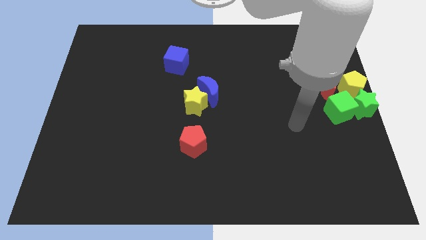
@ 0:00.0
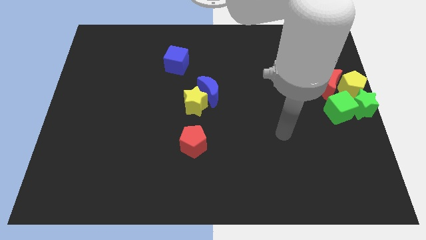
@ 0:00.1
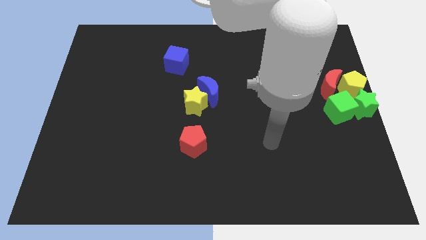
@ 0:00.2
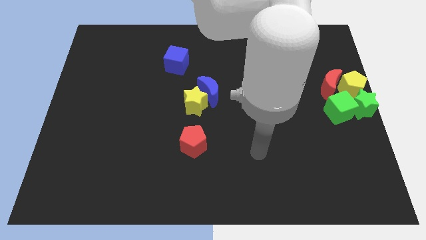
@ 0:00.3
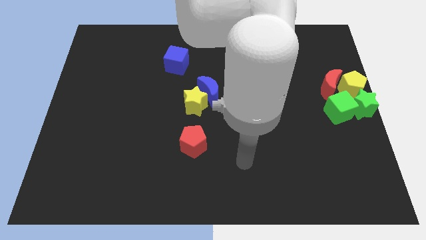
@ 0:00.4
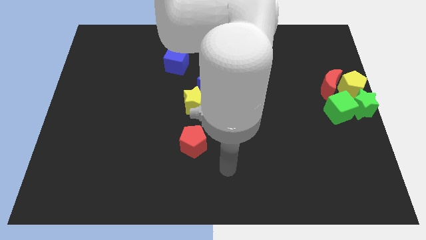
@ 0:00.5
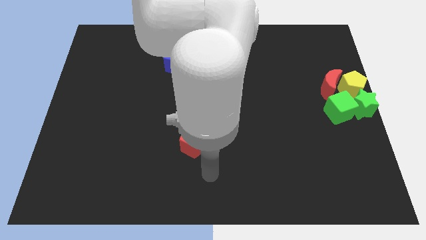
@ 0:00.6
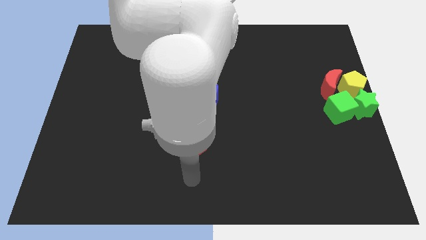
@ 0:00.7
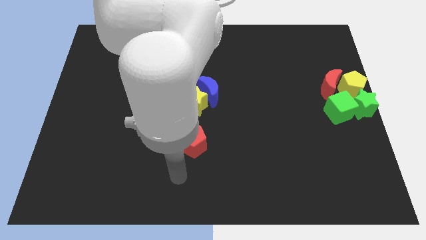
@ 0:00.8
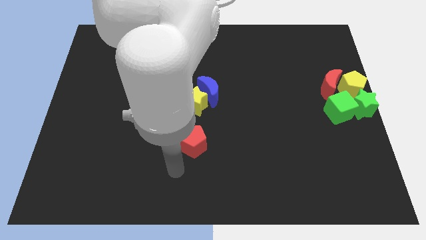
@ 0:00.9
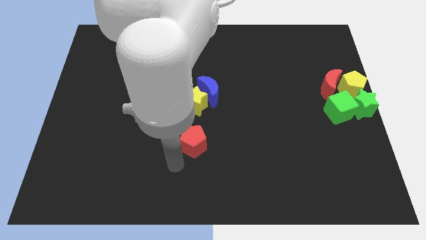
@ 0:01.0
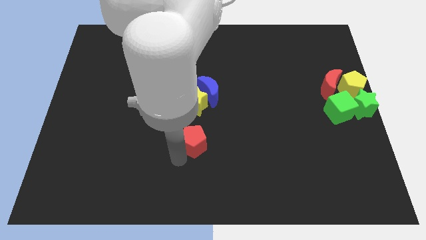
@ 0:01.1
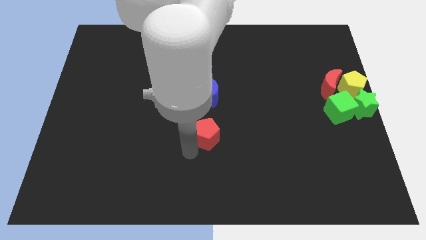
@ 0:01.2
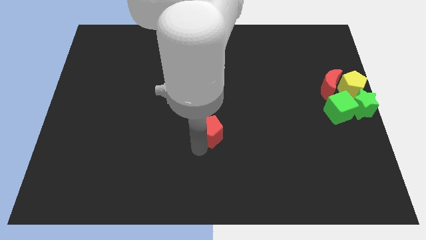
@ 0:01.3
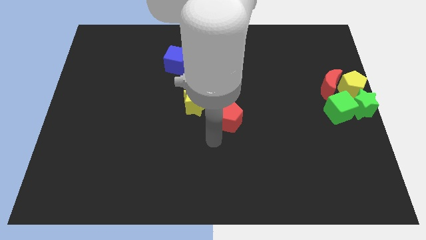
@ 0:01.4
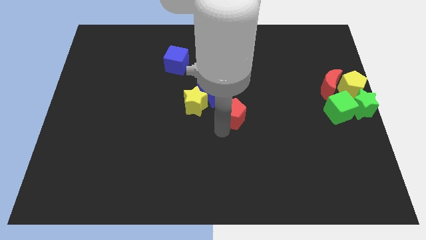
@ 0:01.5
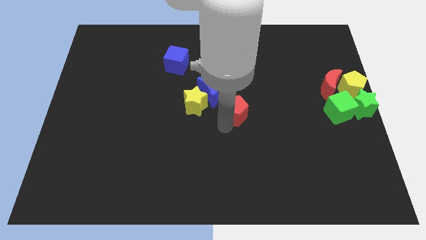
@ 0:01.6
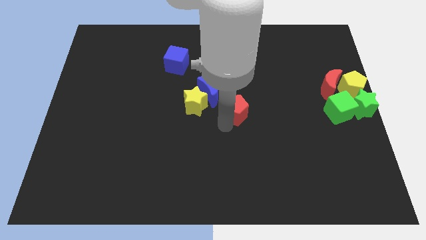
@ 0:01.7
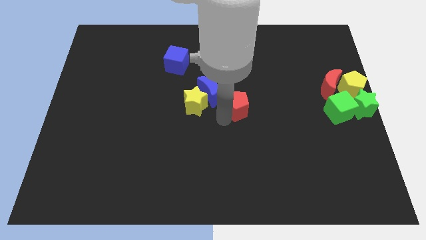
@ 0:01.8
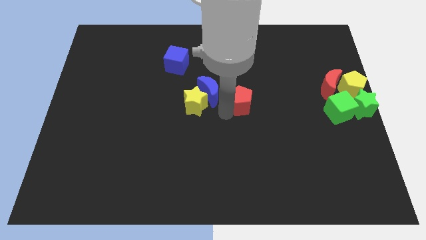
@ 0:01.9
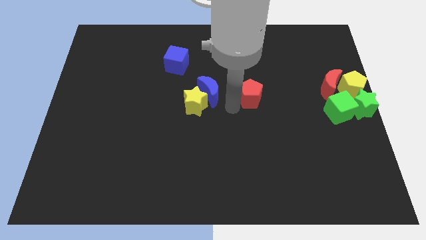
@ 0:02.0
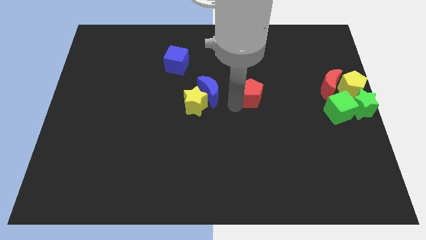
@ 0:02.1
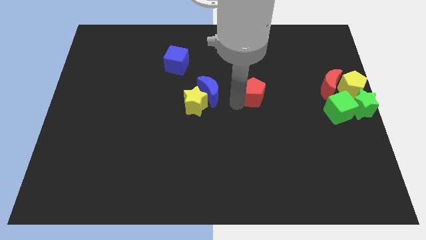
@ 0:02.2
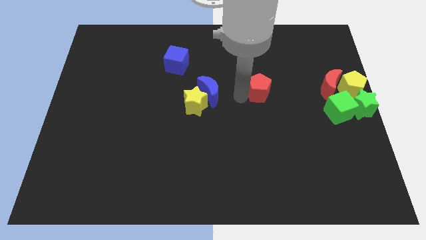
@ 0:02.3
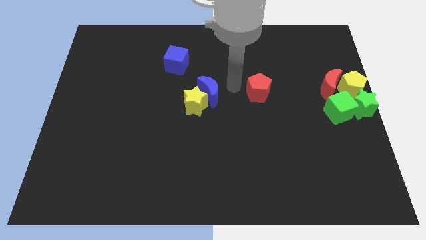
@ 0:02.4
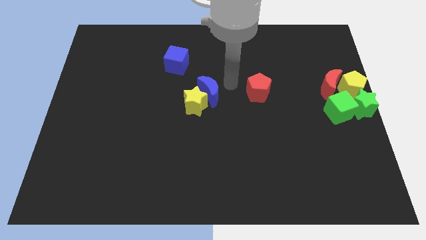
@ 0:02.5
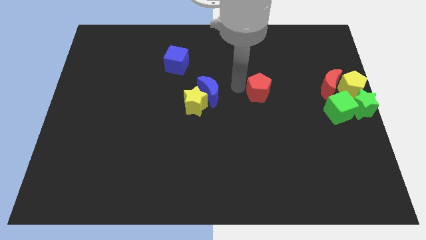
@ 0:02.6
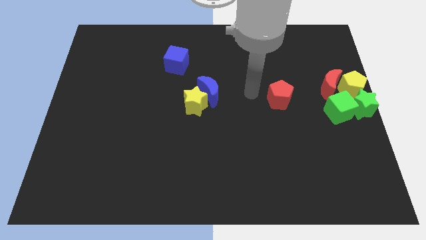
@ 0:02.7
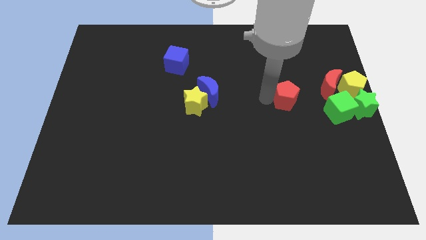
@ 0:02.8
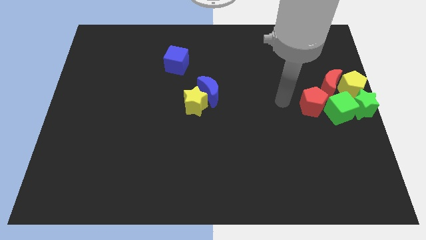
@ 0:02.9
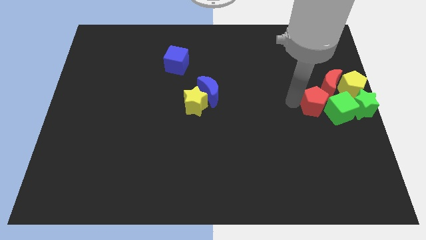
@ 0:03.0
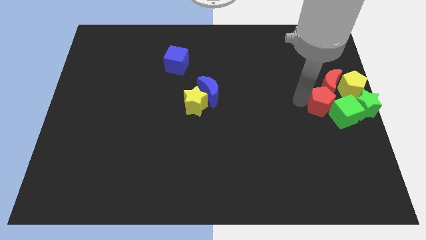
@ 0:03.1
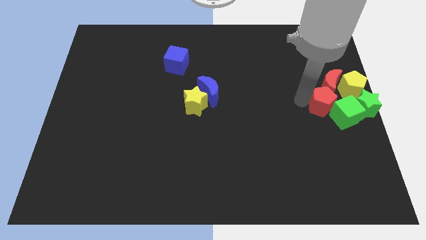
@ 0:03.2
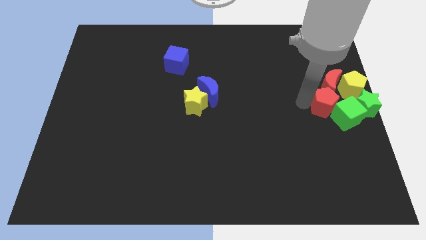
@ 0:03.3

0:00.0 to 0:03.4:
push the red pentagon into green cube

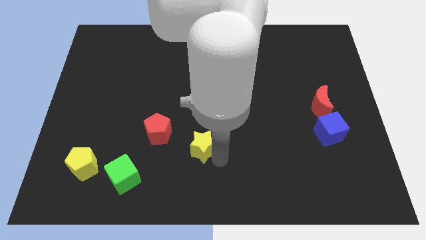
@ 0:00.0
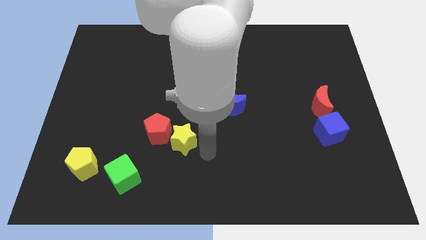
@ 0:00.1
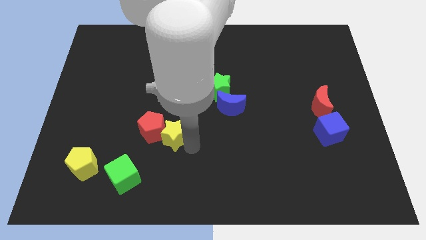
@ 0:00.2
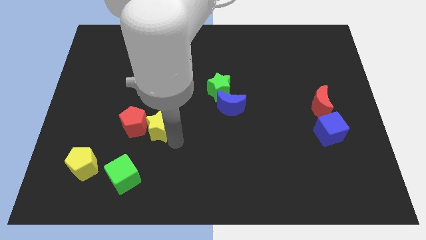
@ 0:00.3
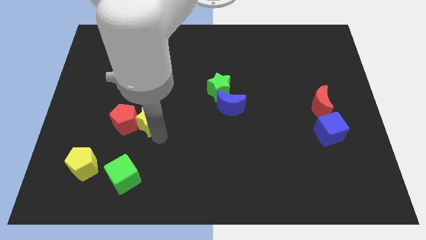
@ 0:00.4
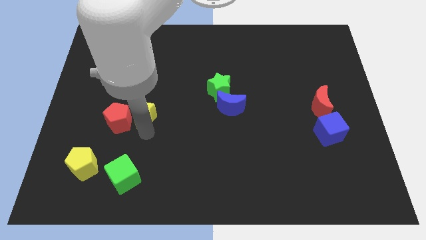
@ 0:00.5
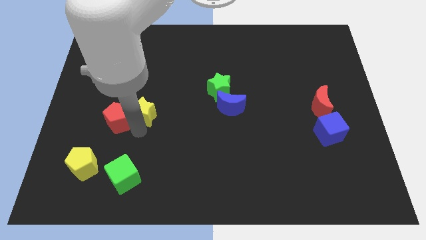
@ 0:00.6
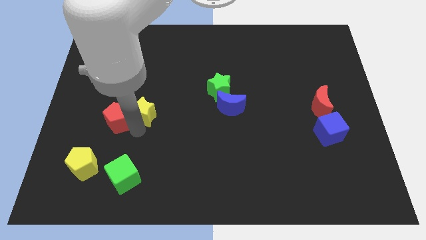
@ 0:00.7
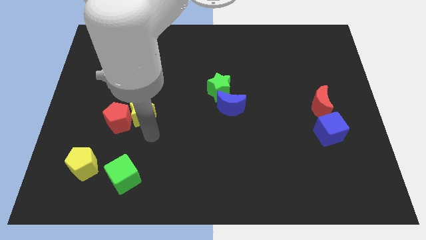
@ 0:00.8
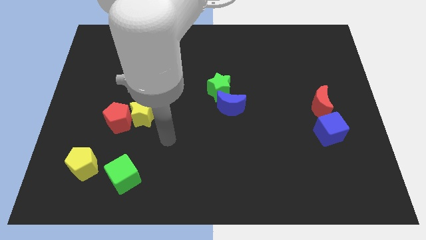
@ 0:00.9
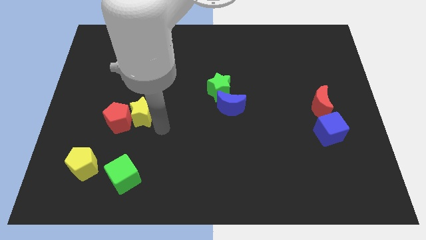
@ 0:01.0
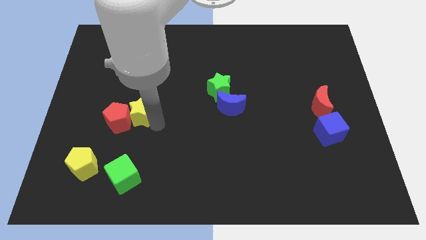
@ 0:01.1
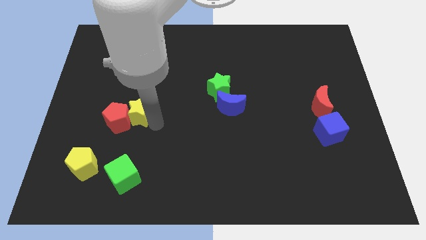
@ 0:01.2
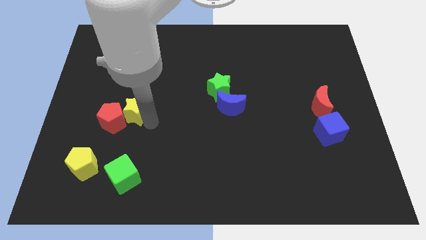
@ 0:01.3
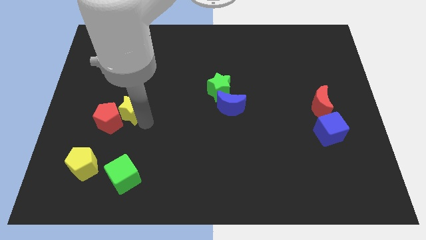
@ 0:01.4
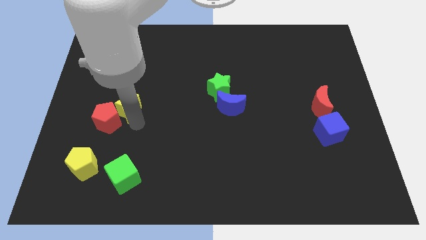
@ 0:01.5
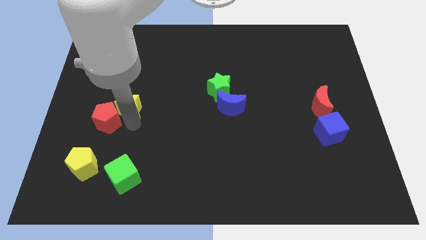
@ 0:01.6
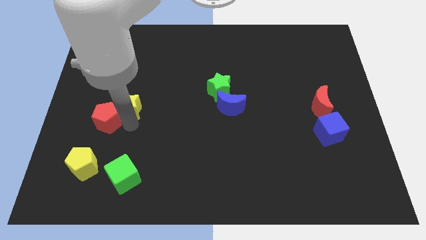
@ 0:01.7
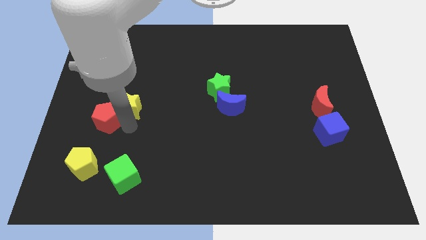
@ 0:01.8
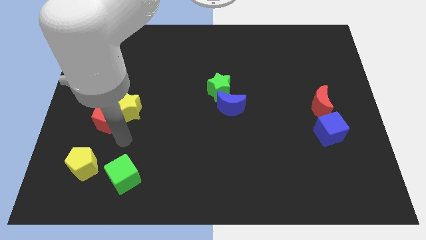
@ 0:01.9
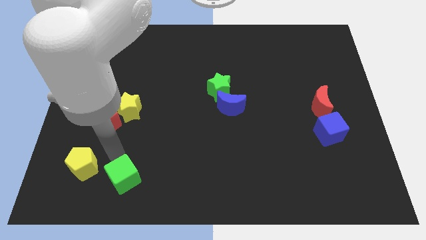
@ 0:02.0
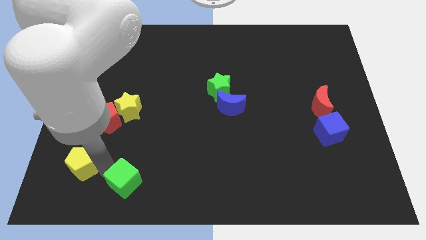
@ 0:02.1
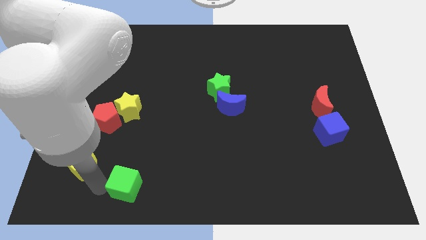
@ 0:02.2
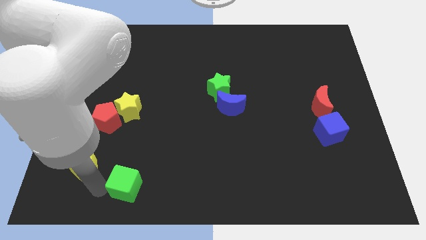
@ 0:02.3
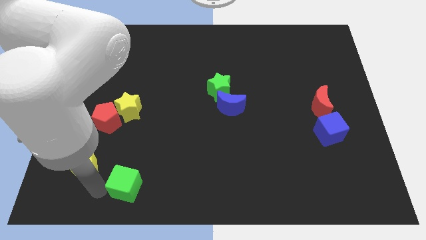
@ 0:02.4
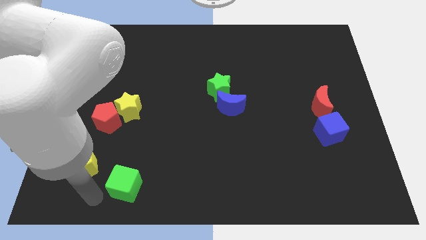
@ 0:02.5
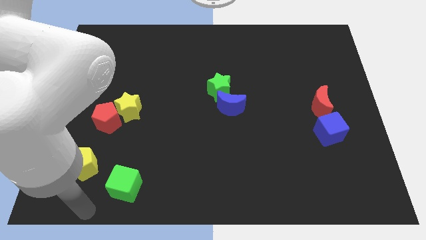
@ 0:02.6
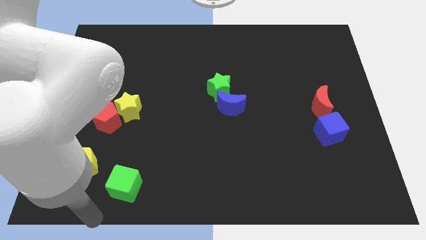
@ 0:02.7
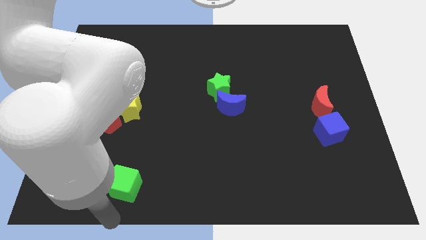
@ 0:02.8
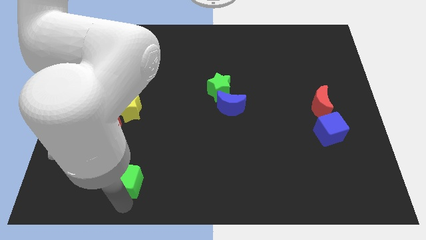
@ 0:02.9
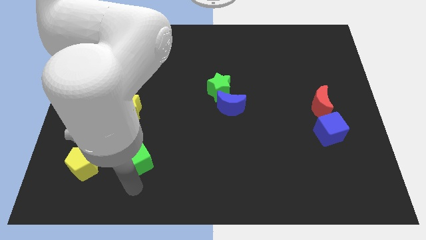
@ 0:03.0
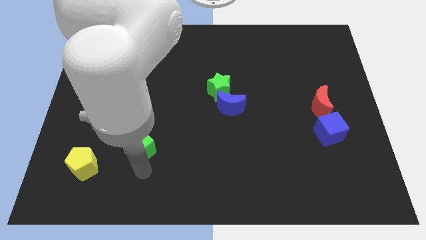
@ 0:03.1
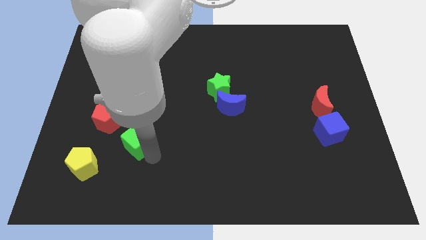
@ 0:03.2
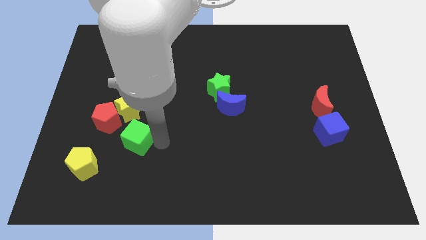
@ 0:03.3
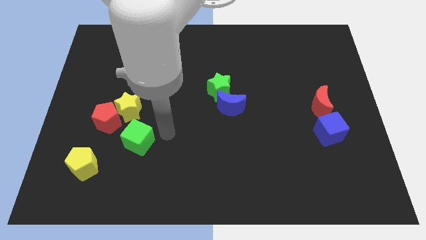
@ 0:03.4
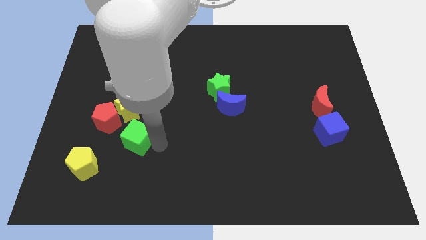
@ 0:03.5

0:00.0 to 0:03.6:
move the green cube upwards

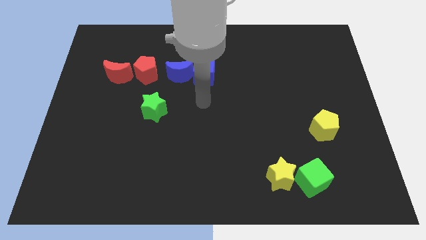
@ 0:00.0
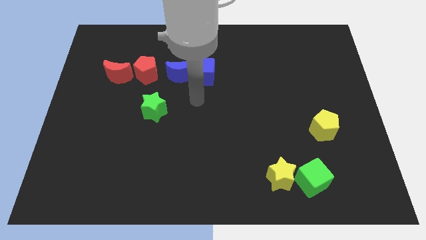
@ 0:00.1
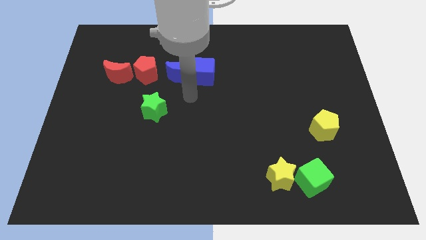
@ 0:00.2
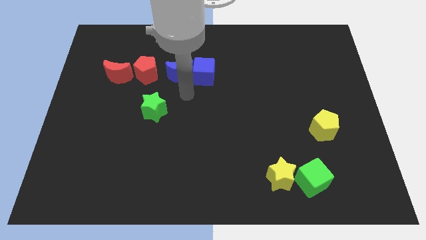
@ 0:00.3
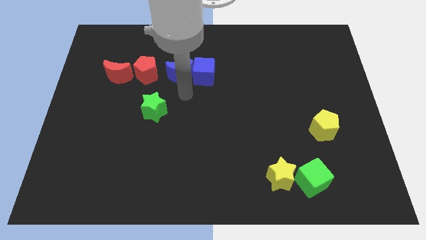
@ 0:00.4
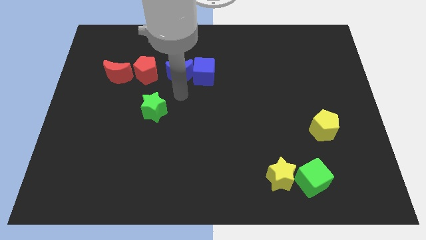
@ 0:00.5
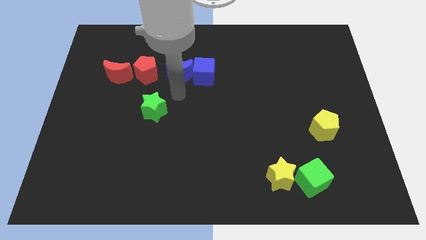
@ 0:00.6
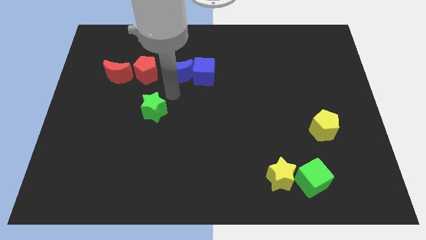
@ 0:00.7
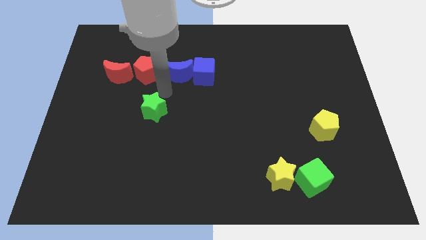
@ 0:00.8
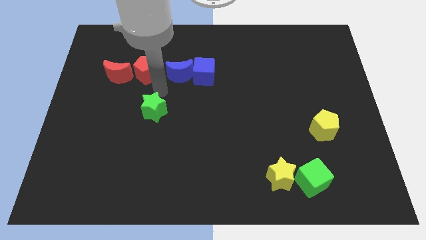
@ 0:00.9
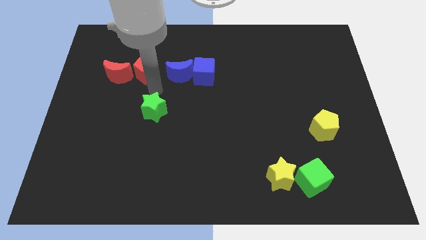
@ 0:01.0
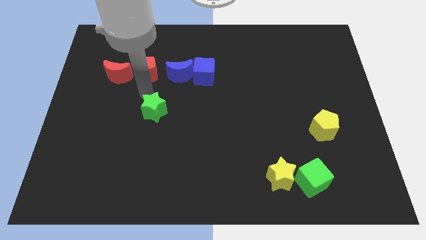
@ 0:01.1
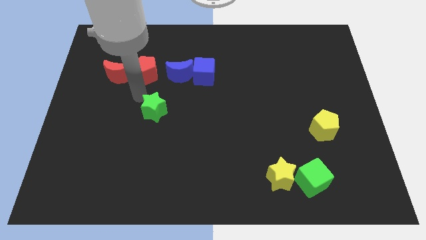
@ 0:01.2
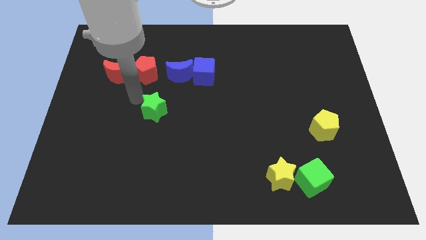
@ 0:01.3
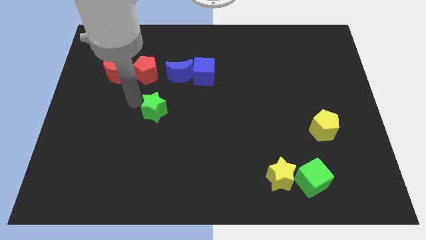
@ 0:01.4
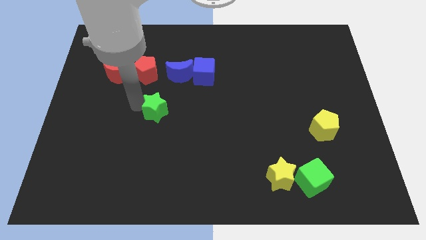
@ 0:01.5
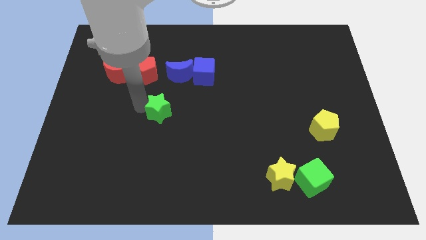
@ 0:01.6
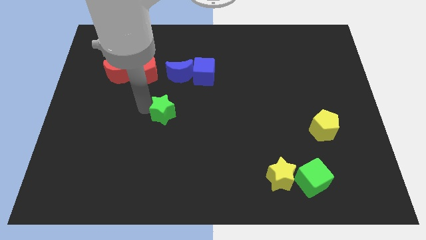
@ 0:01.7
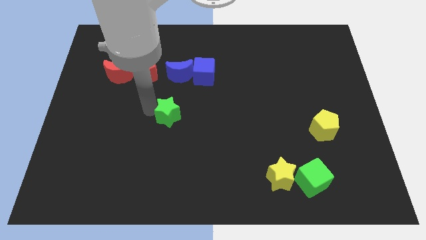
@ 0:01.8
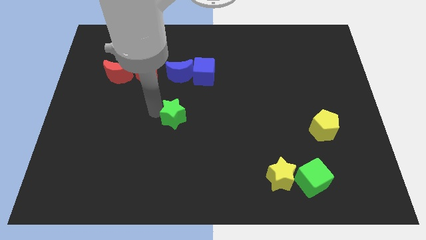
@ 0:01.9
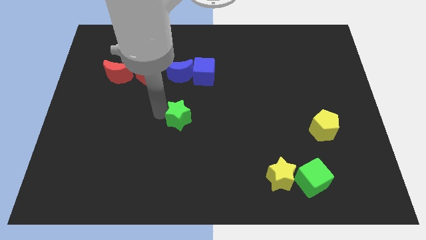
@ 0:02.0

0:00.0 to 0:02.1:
move the green star towards the right side
